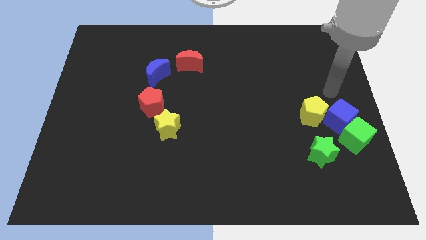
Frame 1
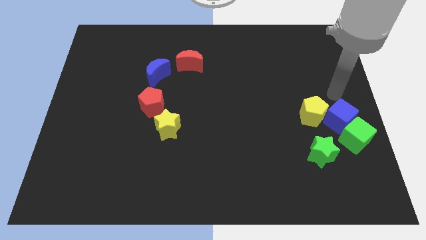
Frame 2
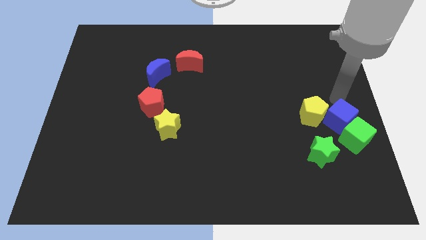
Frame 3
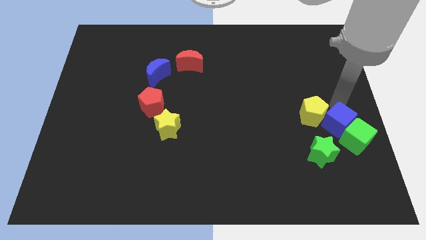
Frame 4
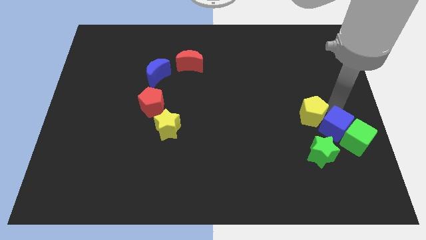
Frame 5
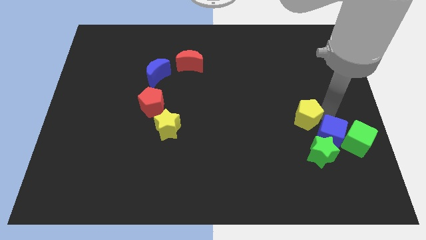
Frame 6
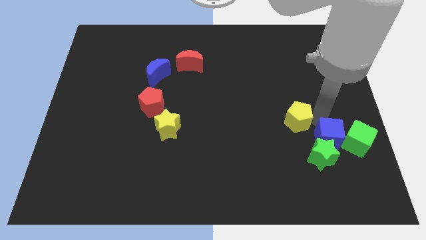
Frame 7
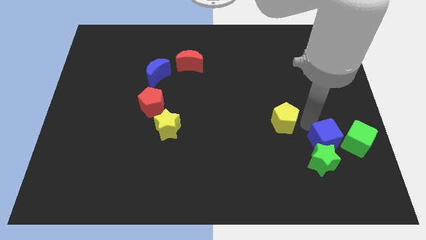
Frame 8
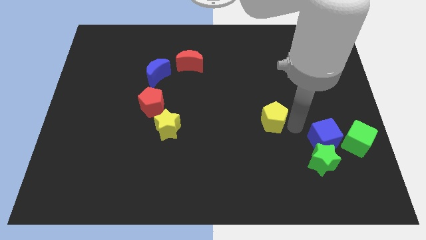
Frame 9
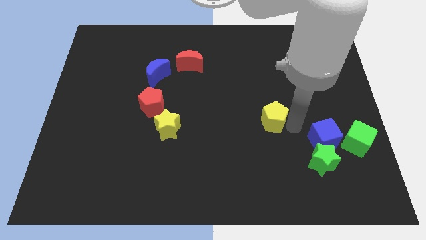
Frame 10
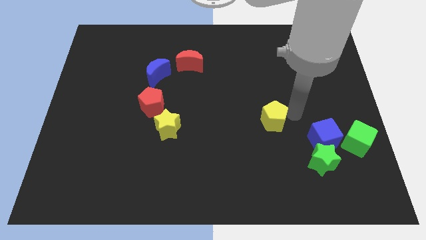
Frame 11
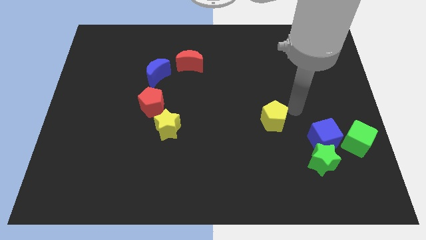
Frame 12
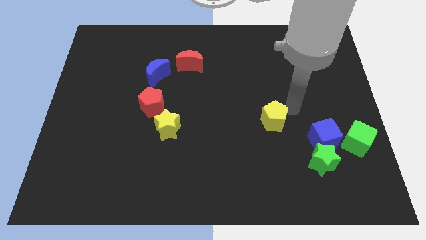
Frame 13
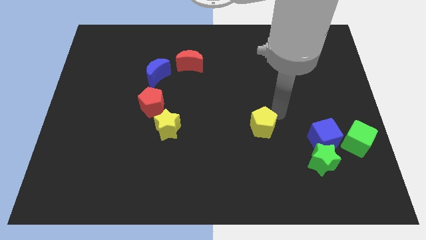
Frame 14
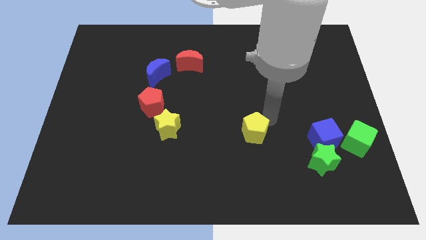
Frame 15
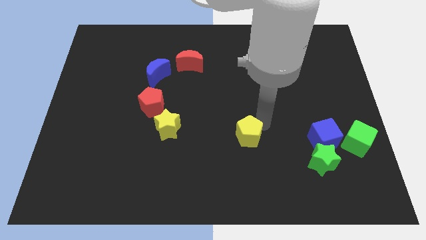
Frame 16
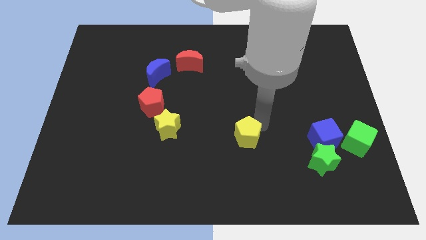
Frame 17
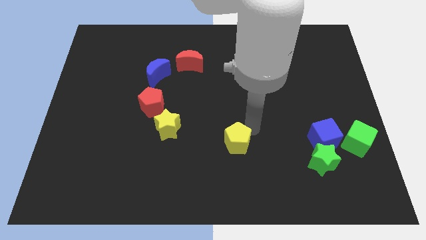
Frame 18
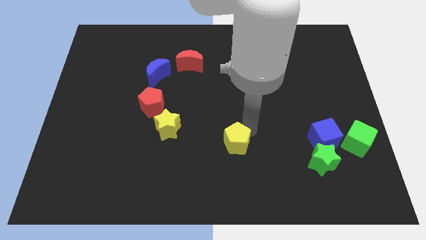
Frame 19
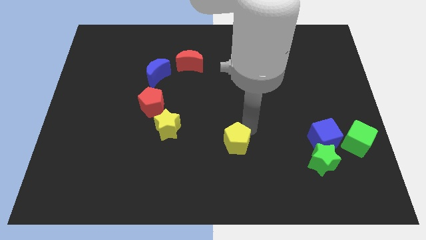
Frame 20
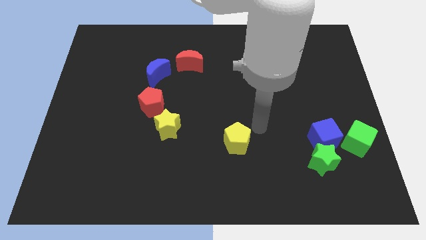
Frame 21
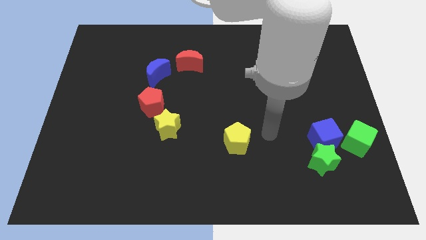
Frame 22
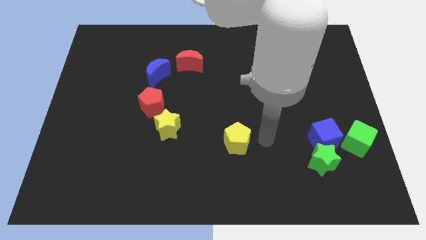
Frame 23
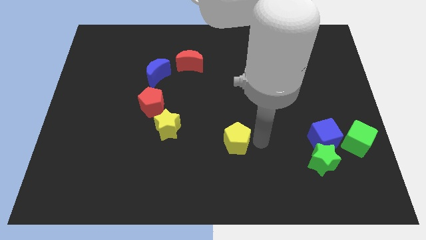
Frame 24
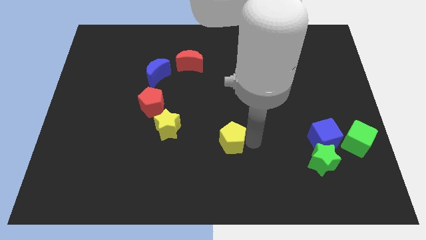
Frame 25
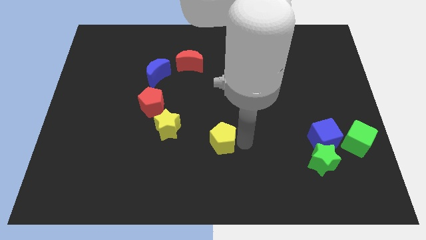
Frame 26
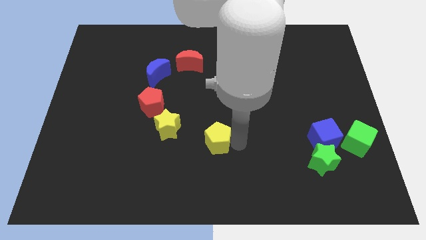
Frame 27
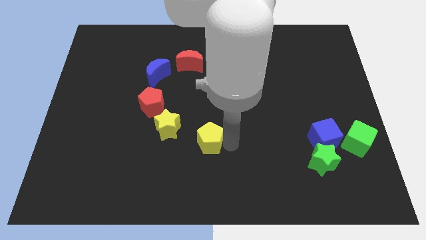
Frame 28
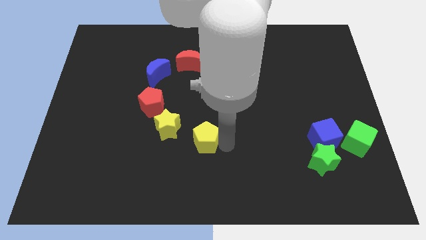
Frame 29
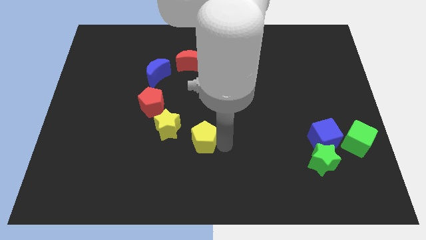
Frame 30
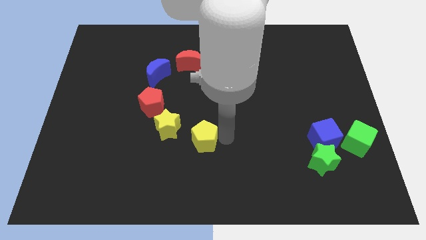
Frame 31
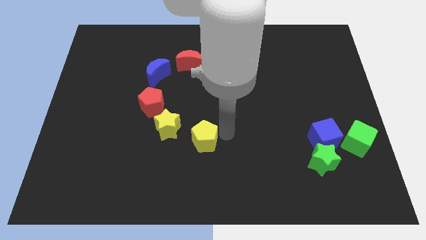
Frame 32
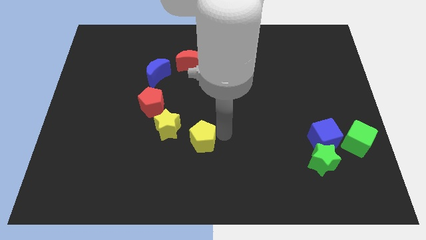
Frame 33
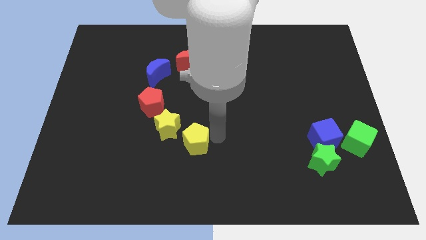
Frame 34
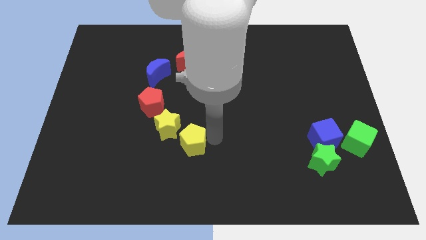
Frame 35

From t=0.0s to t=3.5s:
move the yellow pentagon towards the yellow star

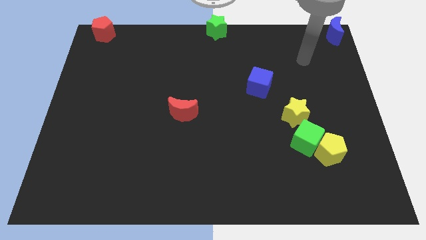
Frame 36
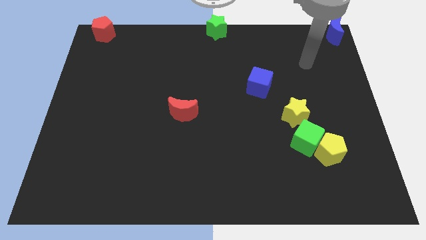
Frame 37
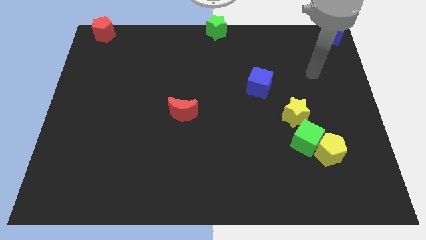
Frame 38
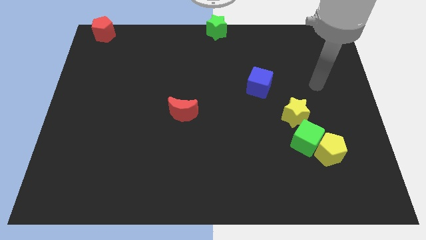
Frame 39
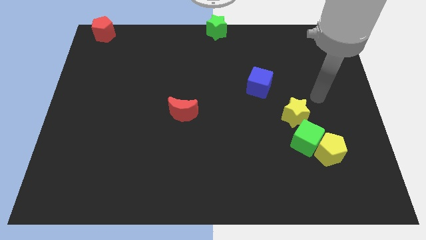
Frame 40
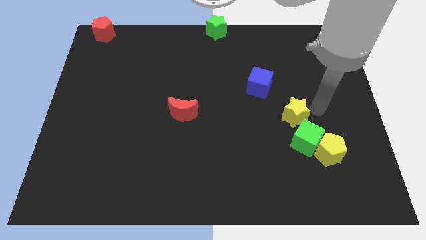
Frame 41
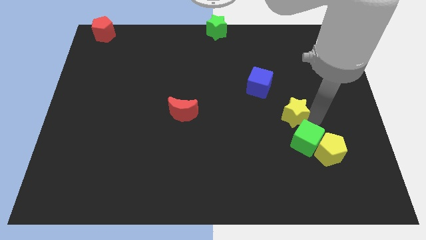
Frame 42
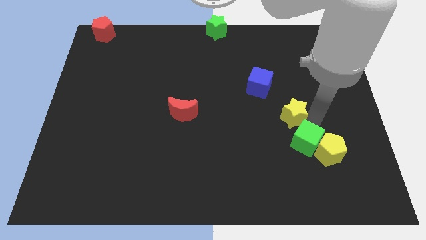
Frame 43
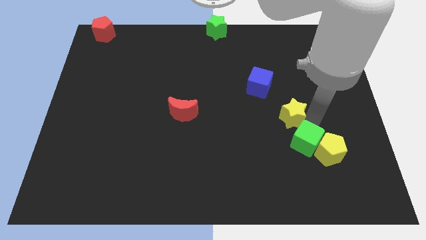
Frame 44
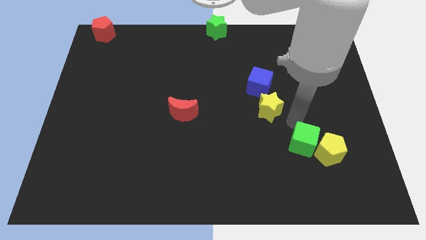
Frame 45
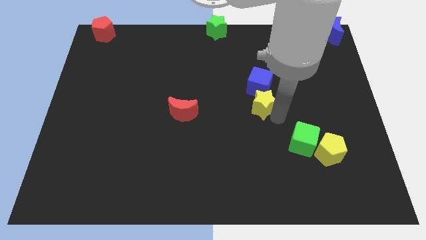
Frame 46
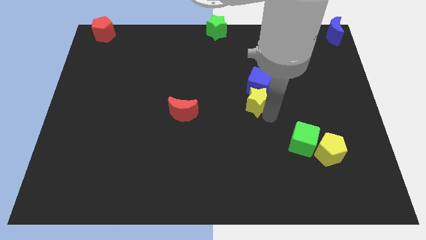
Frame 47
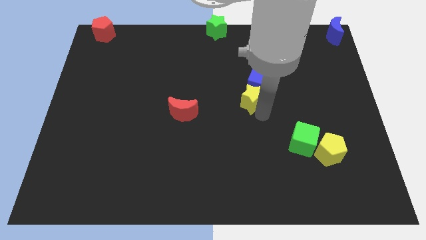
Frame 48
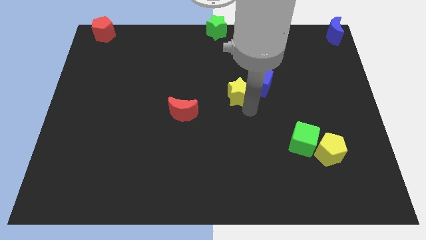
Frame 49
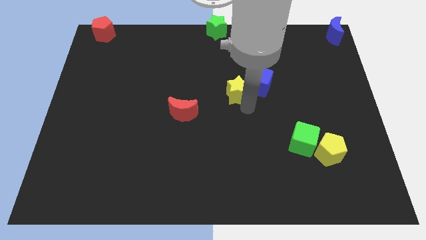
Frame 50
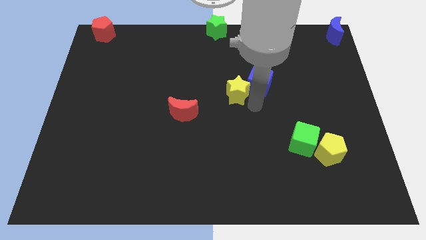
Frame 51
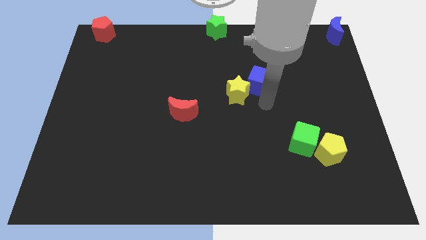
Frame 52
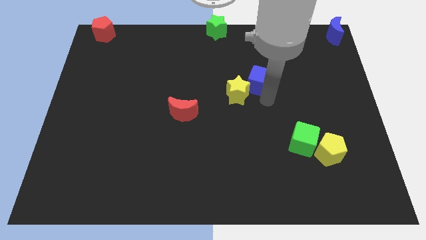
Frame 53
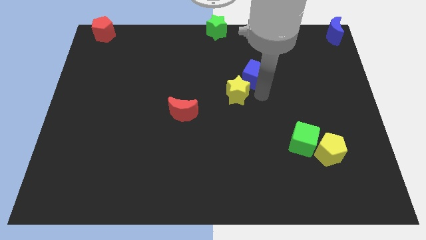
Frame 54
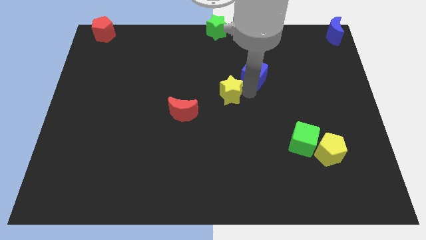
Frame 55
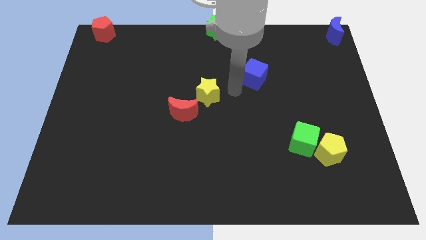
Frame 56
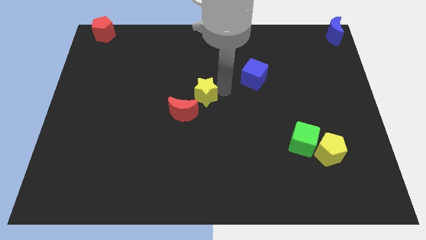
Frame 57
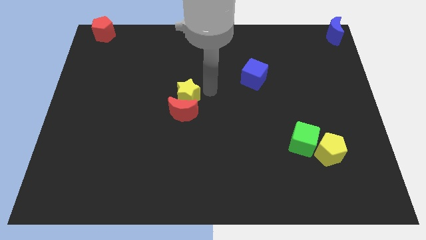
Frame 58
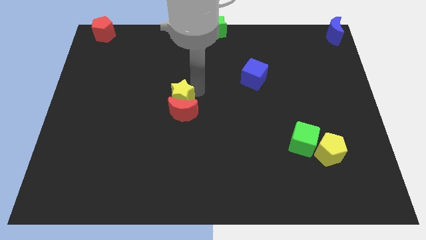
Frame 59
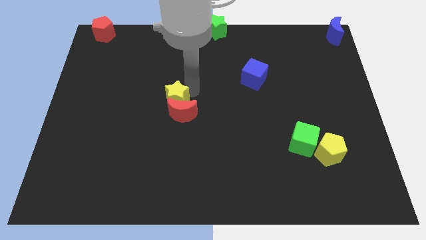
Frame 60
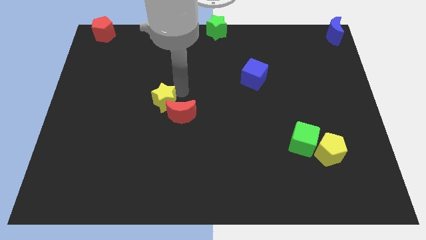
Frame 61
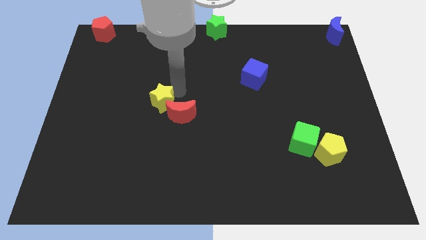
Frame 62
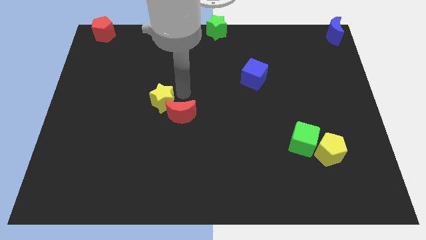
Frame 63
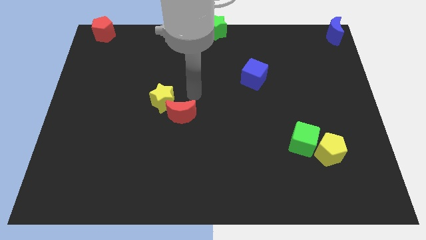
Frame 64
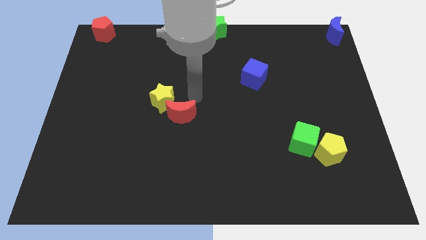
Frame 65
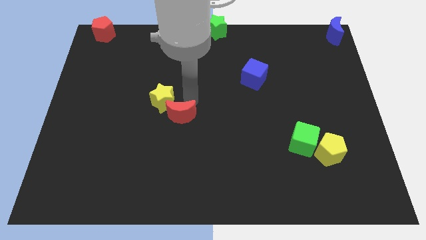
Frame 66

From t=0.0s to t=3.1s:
slide the yellow star to the top left side of the red crescent

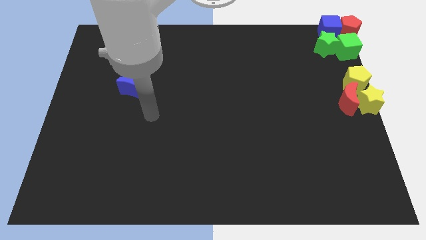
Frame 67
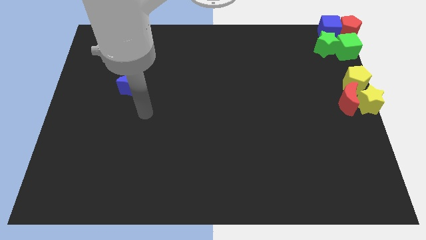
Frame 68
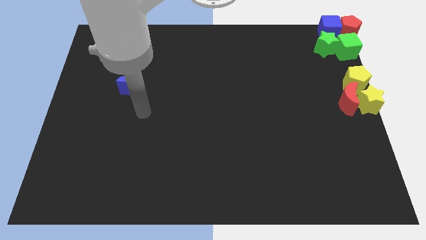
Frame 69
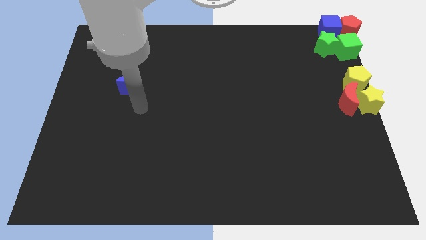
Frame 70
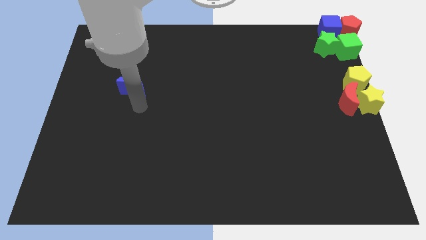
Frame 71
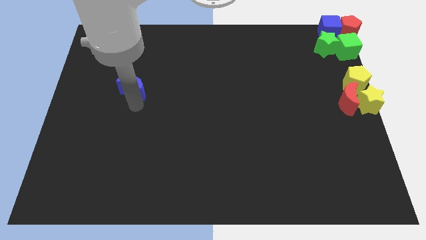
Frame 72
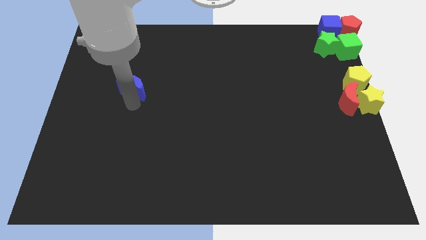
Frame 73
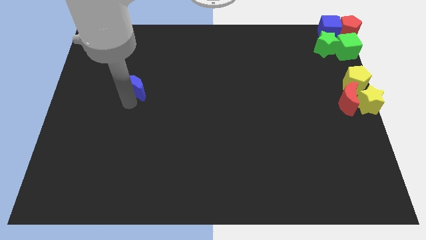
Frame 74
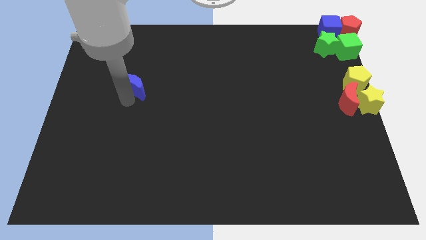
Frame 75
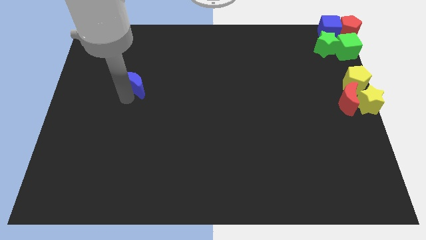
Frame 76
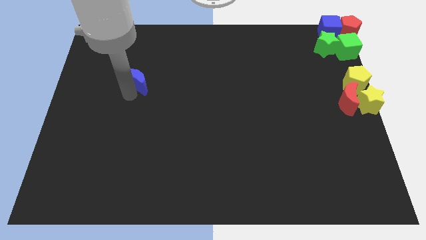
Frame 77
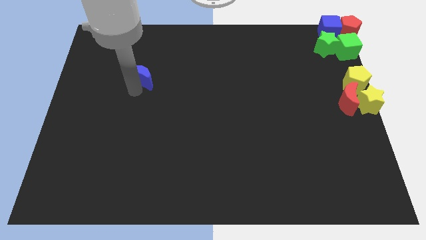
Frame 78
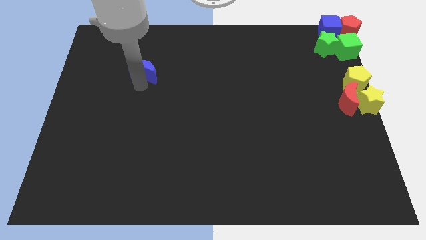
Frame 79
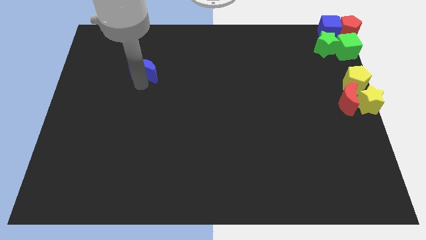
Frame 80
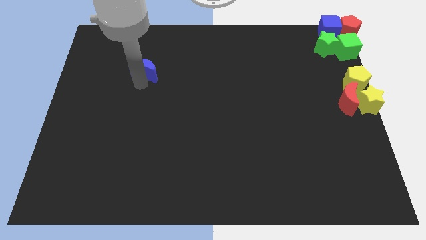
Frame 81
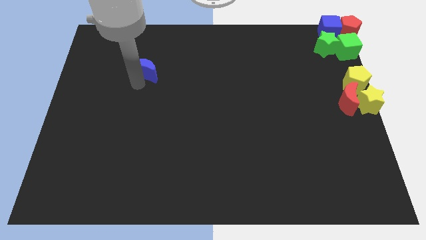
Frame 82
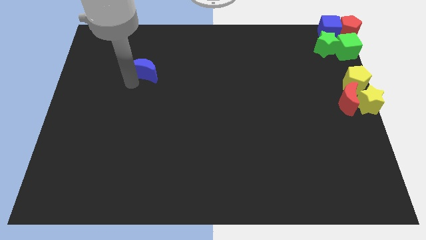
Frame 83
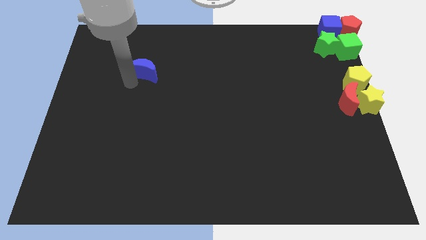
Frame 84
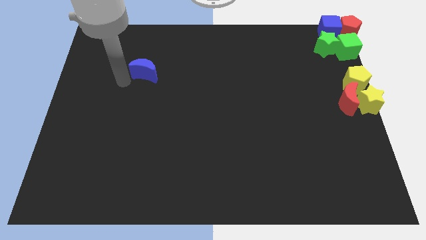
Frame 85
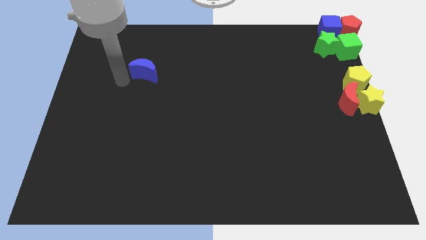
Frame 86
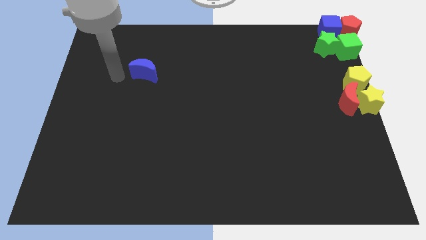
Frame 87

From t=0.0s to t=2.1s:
push the blue crescent to the upward of the board

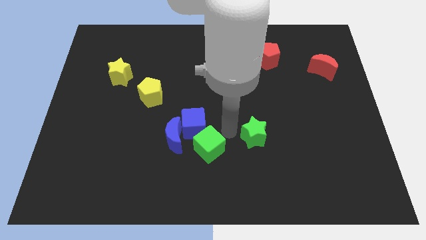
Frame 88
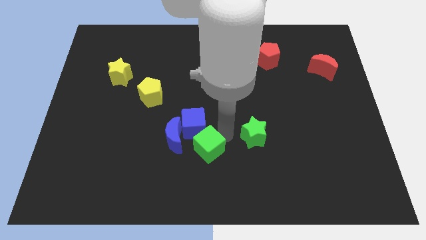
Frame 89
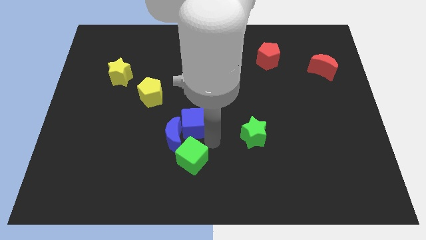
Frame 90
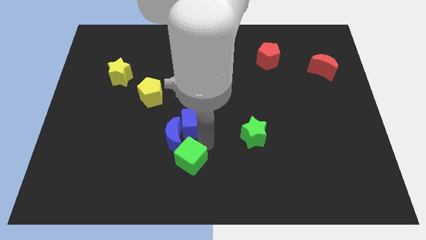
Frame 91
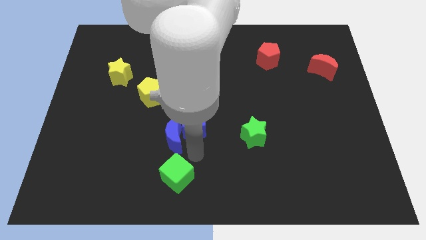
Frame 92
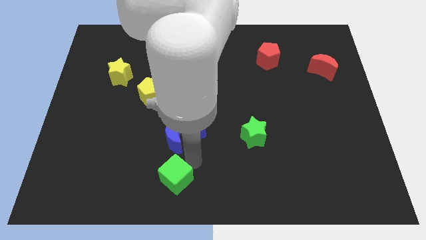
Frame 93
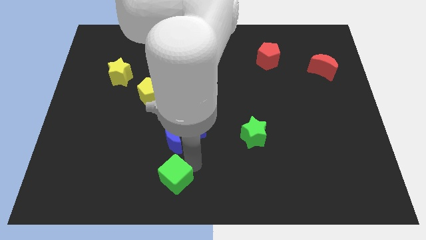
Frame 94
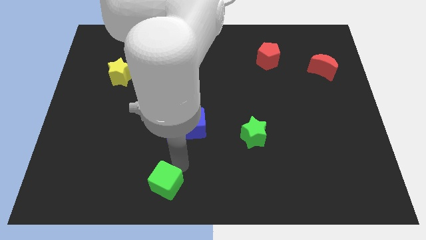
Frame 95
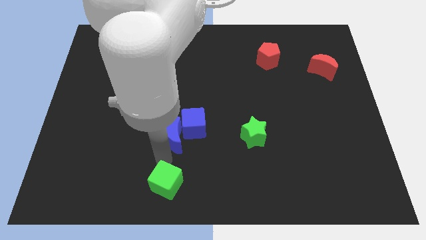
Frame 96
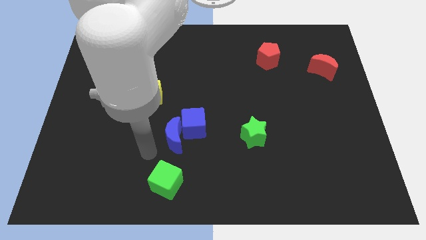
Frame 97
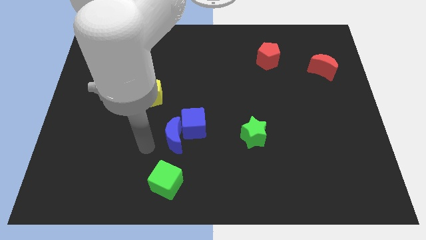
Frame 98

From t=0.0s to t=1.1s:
push the green cube towards the bottom center of the board
